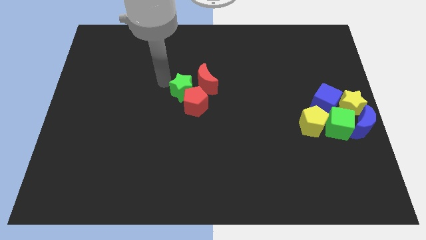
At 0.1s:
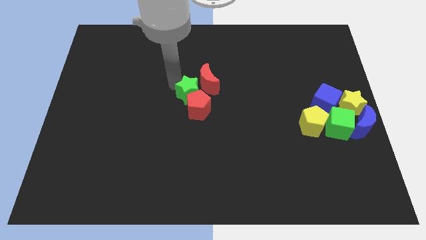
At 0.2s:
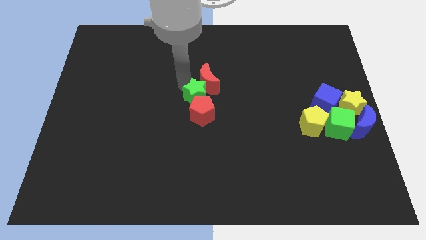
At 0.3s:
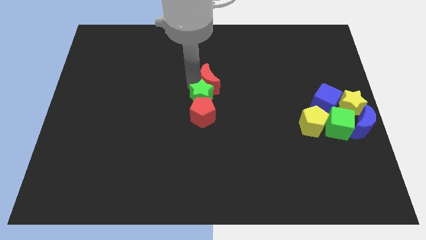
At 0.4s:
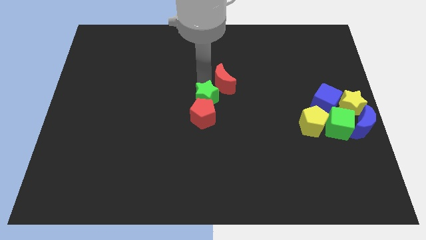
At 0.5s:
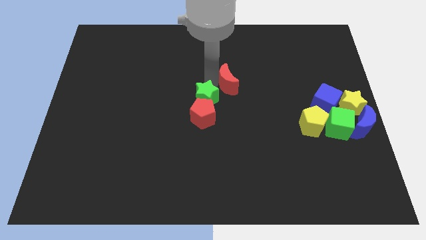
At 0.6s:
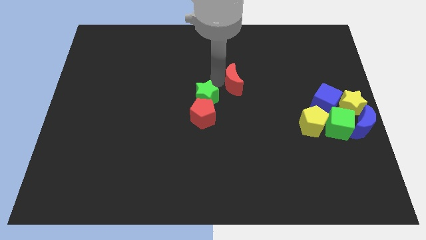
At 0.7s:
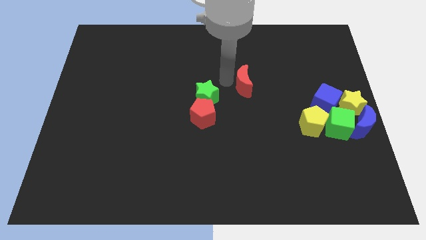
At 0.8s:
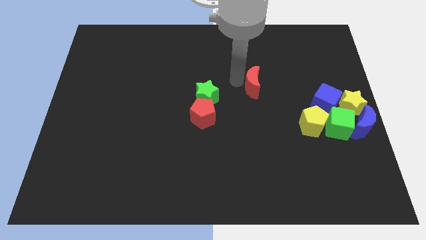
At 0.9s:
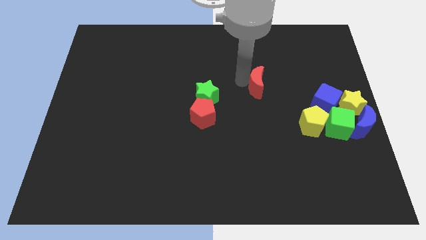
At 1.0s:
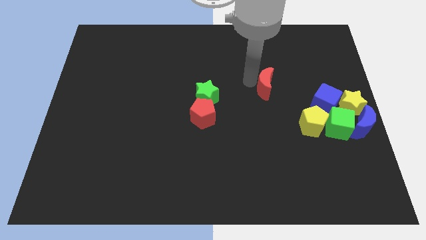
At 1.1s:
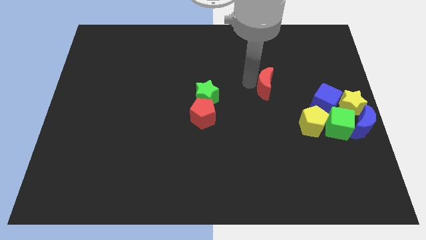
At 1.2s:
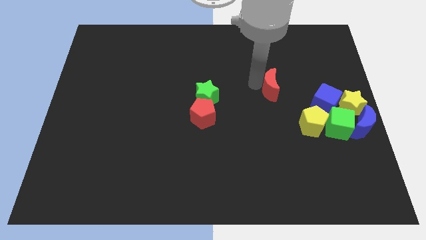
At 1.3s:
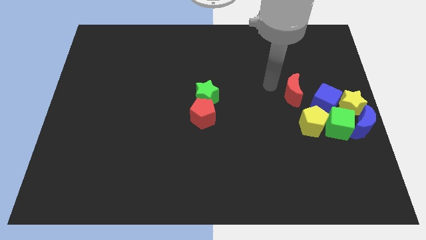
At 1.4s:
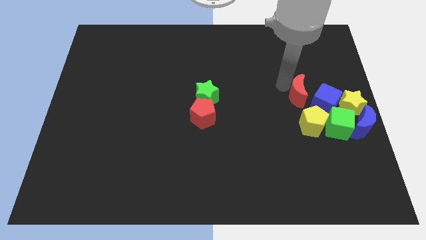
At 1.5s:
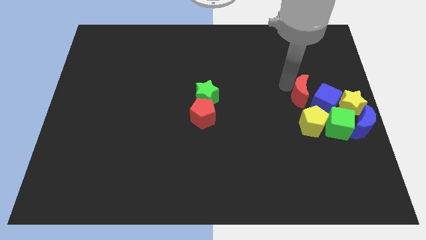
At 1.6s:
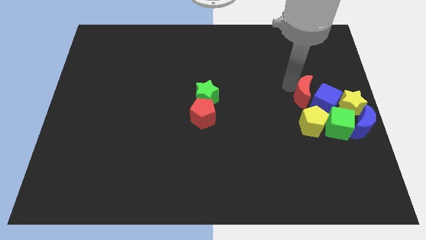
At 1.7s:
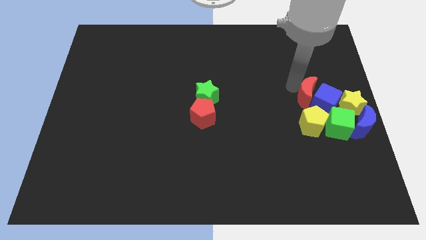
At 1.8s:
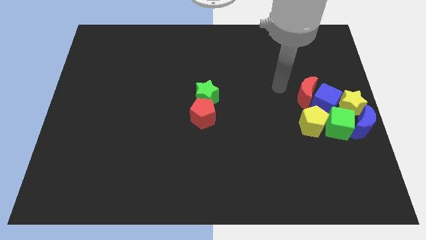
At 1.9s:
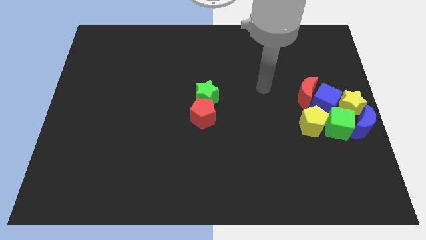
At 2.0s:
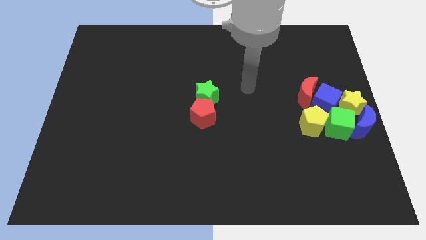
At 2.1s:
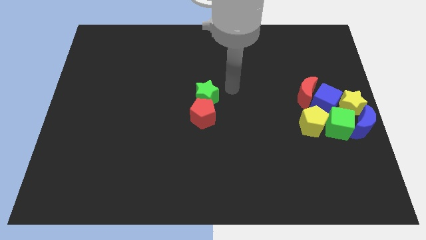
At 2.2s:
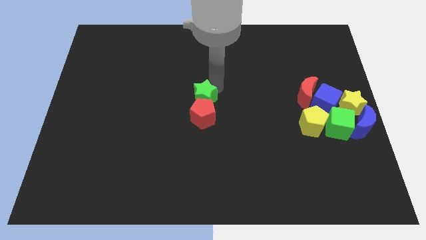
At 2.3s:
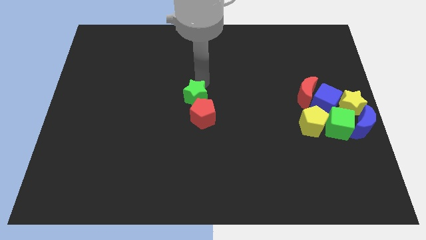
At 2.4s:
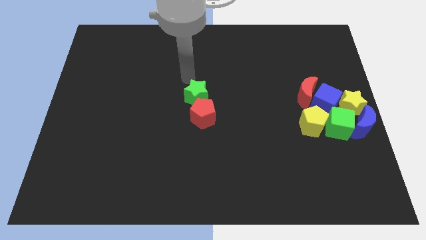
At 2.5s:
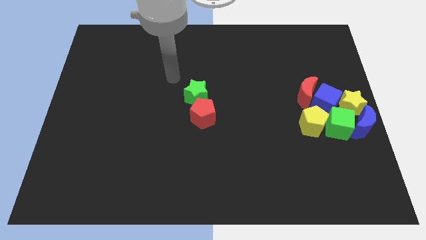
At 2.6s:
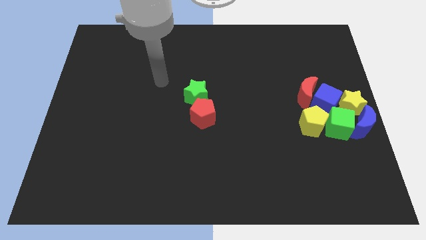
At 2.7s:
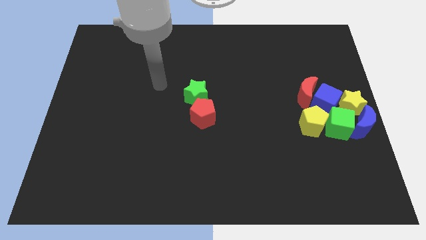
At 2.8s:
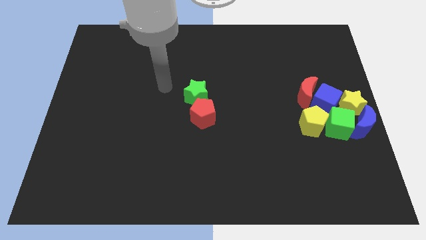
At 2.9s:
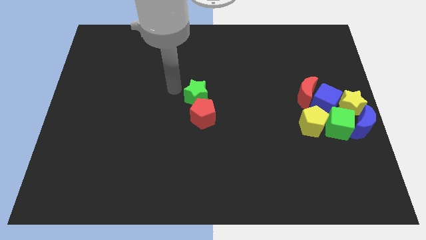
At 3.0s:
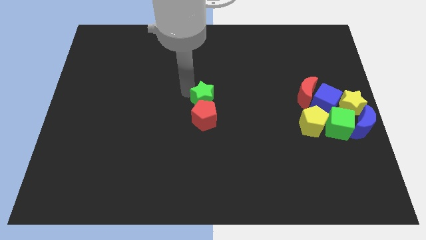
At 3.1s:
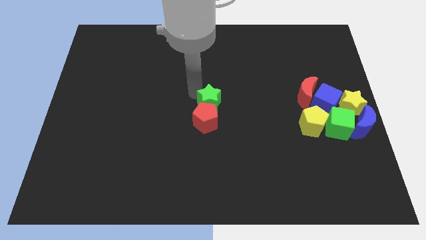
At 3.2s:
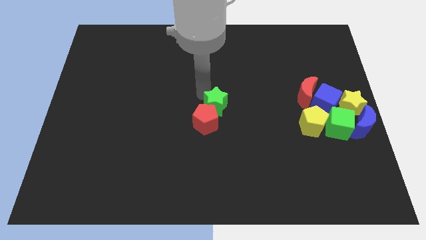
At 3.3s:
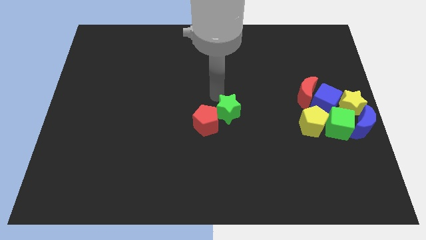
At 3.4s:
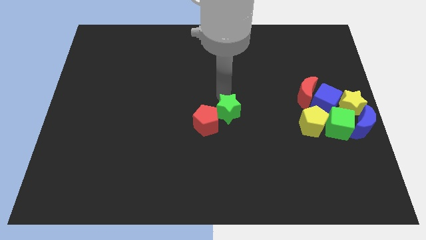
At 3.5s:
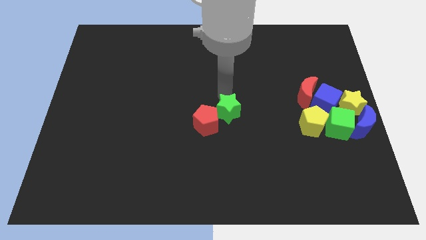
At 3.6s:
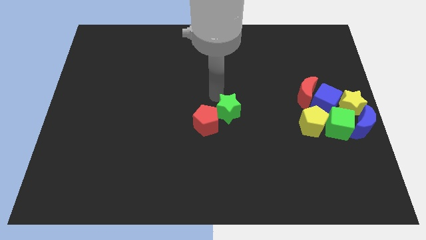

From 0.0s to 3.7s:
push green star slightly towards down

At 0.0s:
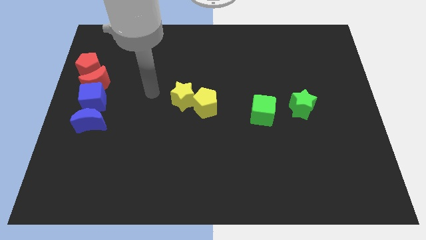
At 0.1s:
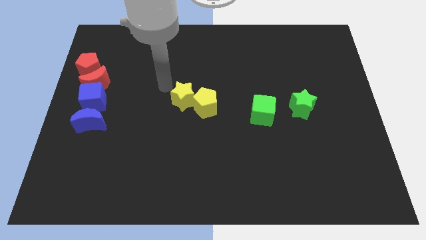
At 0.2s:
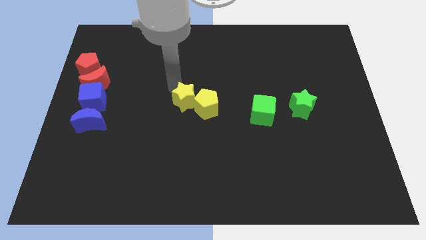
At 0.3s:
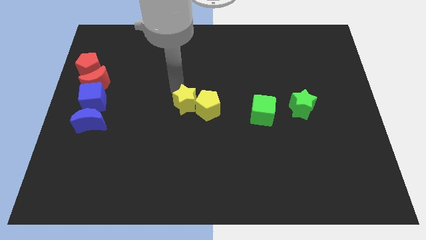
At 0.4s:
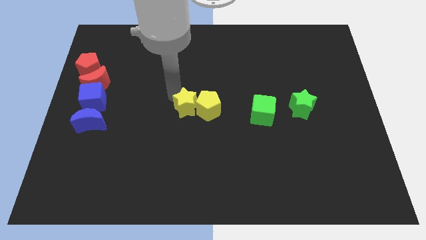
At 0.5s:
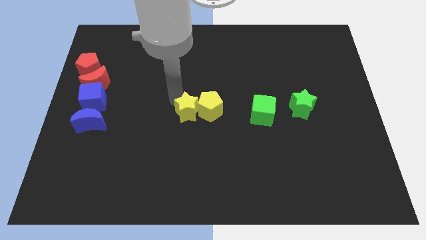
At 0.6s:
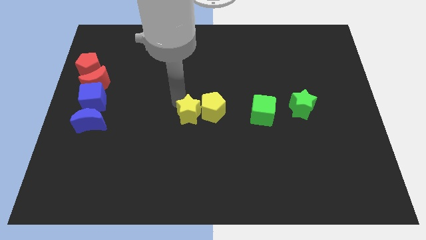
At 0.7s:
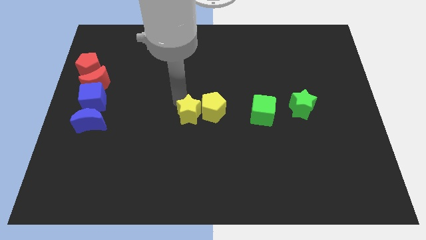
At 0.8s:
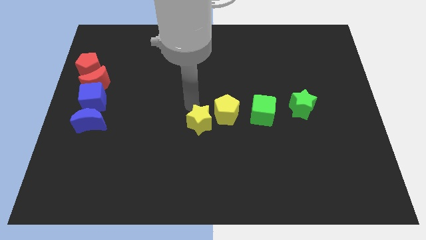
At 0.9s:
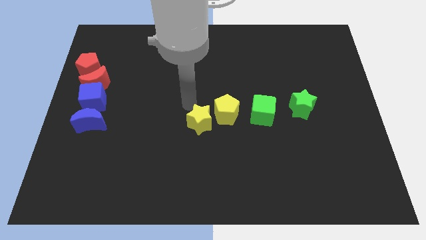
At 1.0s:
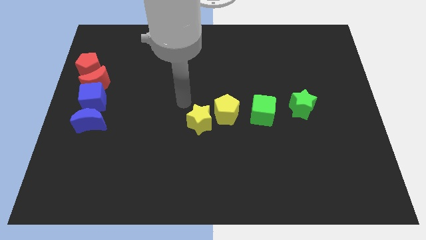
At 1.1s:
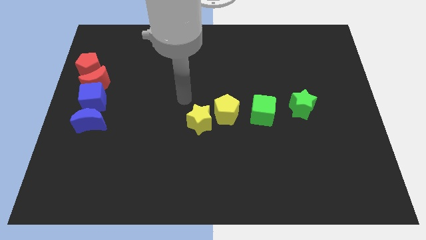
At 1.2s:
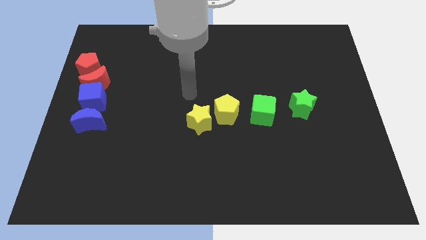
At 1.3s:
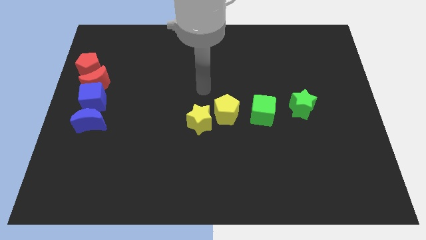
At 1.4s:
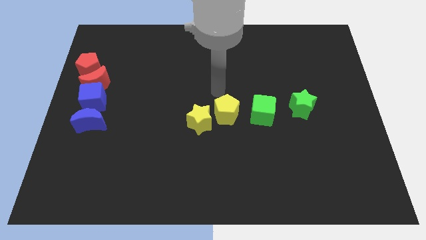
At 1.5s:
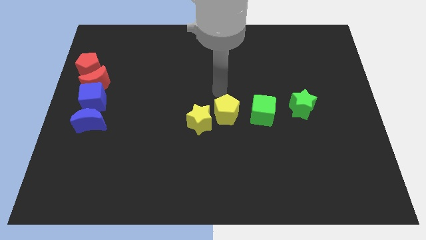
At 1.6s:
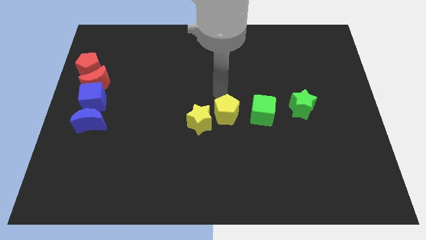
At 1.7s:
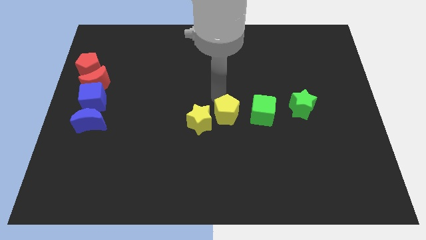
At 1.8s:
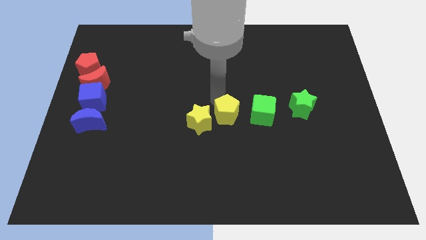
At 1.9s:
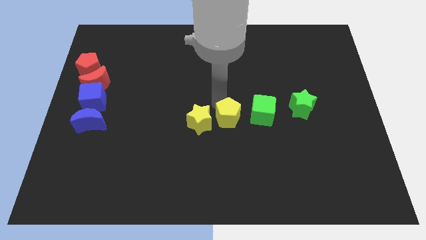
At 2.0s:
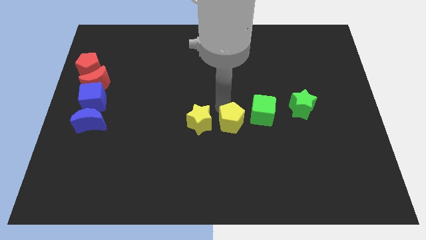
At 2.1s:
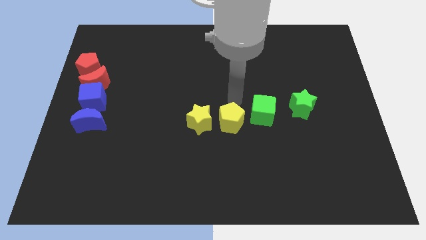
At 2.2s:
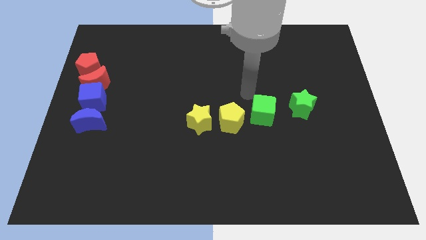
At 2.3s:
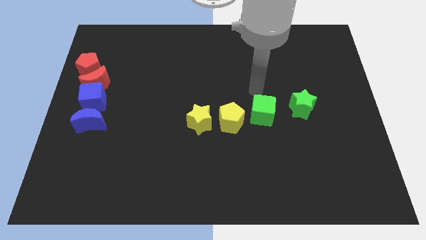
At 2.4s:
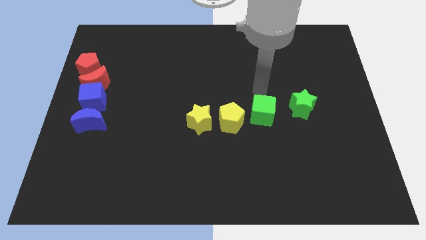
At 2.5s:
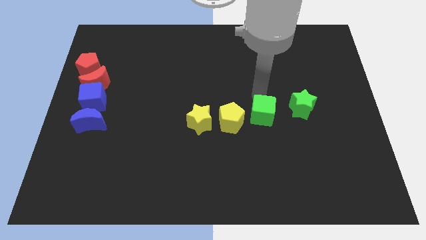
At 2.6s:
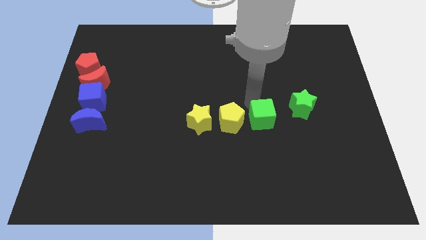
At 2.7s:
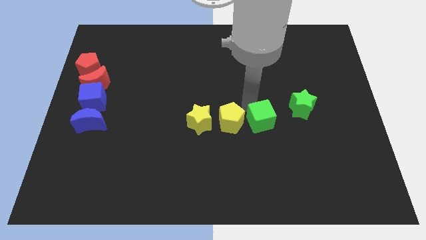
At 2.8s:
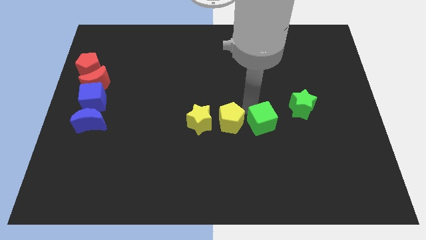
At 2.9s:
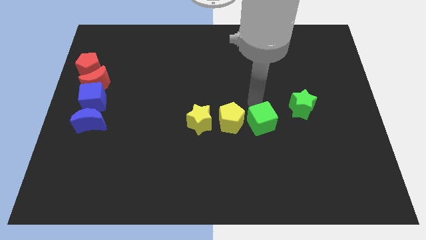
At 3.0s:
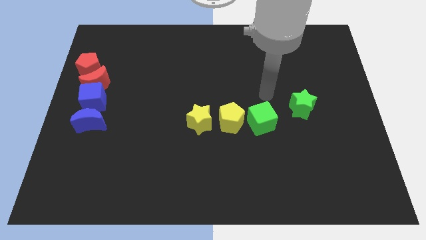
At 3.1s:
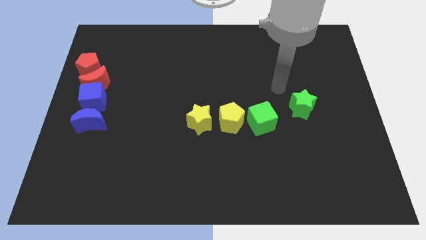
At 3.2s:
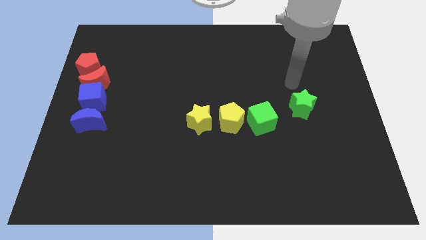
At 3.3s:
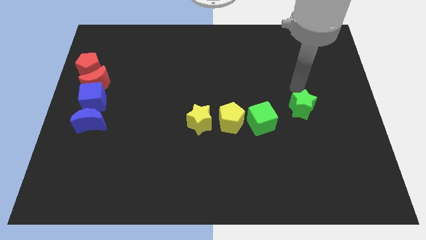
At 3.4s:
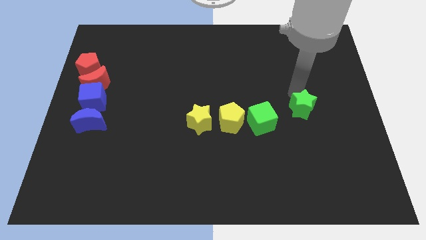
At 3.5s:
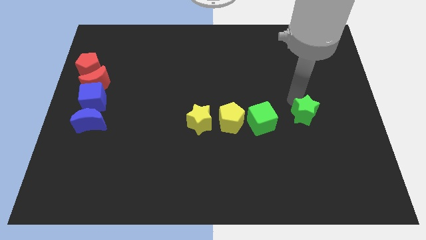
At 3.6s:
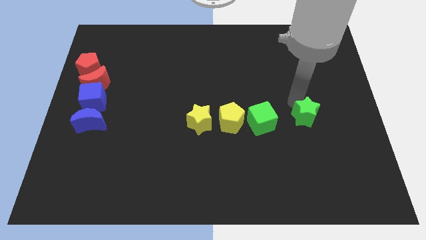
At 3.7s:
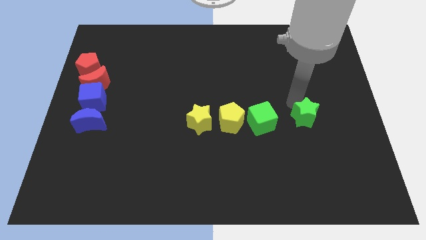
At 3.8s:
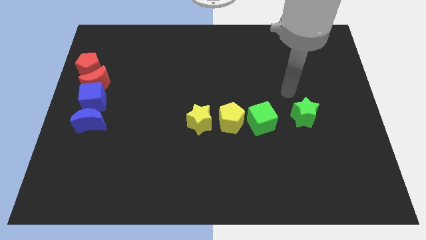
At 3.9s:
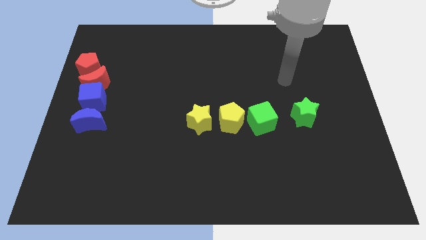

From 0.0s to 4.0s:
adjust the yellow blocks and green blocks at the right side of the table

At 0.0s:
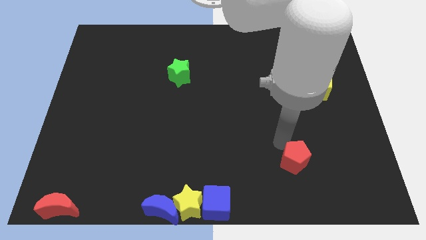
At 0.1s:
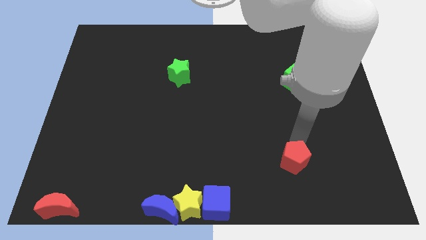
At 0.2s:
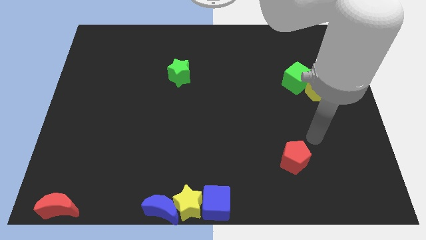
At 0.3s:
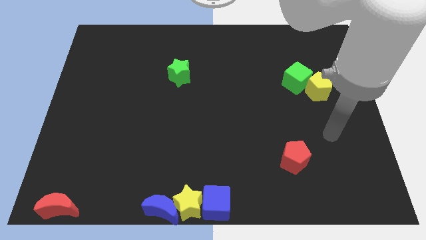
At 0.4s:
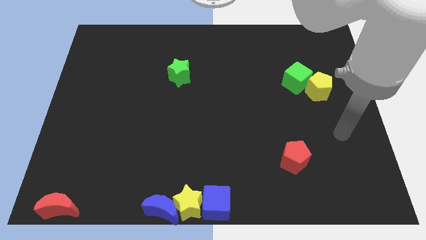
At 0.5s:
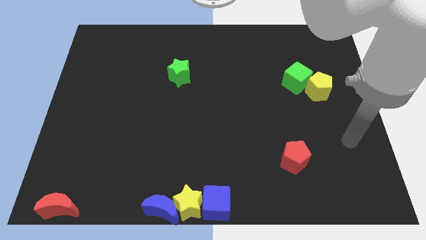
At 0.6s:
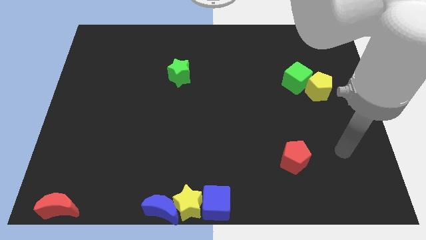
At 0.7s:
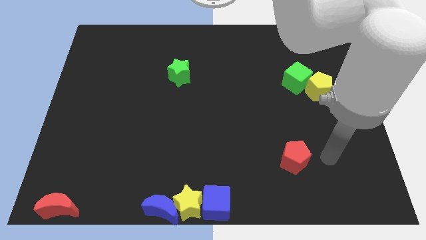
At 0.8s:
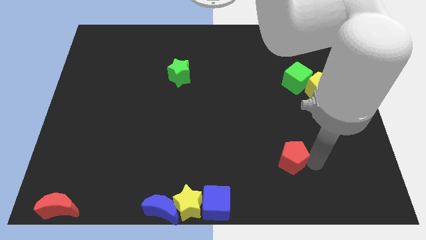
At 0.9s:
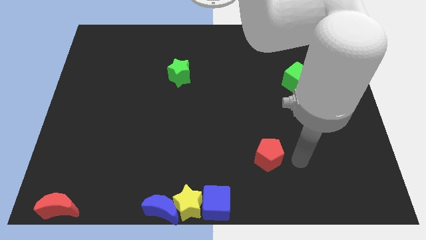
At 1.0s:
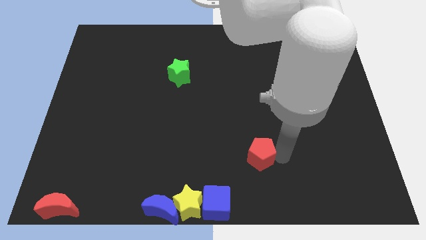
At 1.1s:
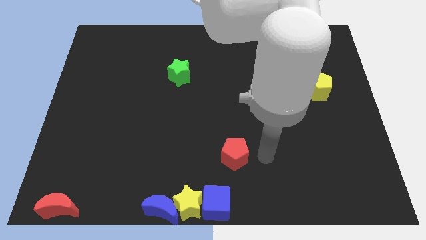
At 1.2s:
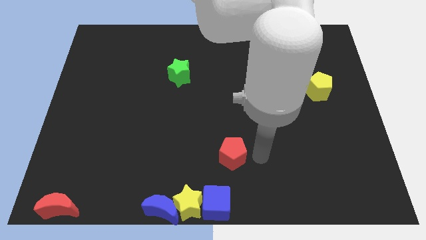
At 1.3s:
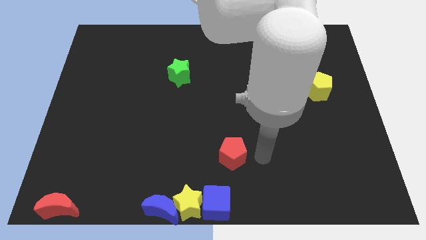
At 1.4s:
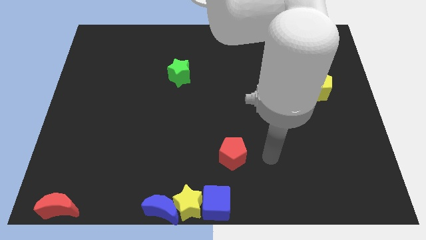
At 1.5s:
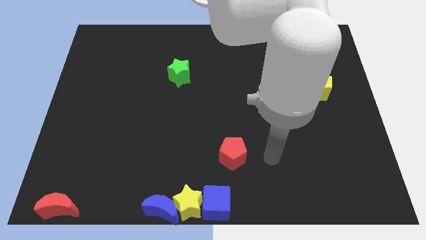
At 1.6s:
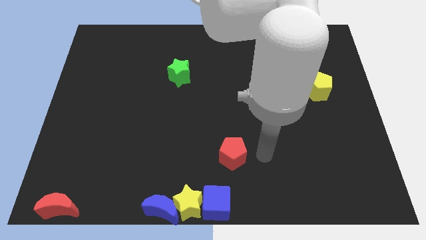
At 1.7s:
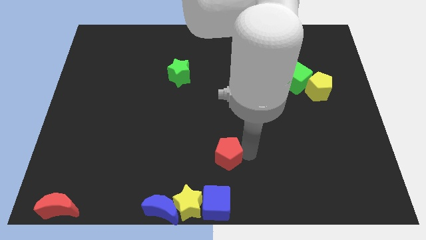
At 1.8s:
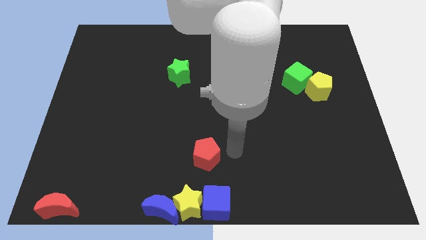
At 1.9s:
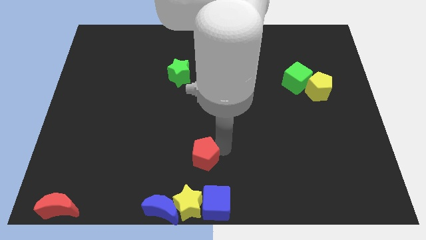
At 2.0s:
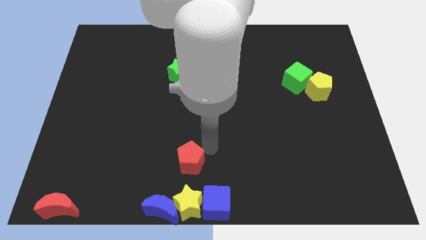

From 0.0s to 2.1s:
place the red pentagon to the top of yellow star
